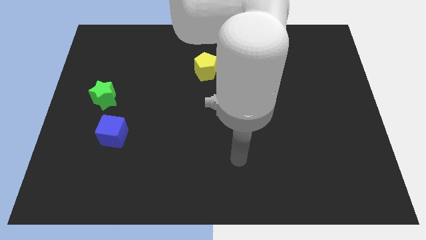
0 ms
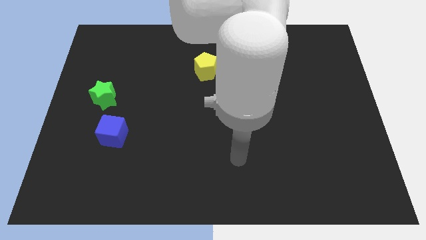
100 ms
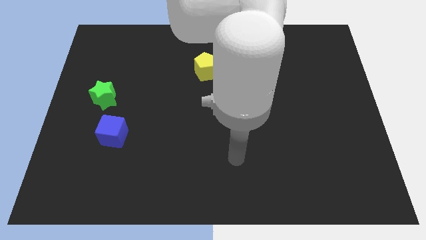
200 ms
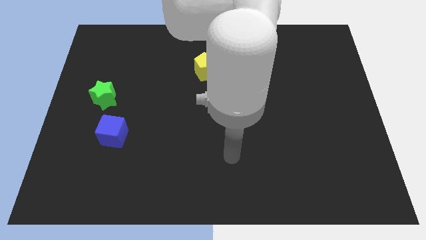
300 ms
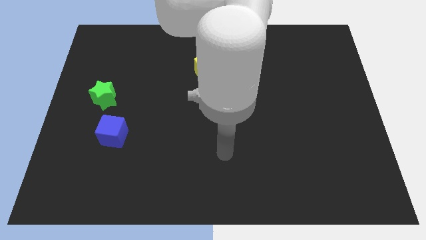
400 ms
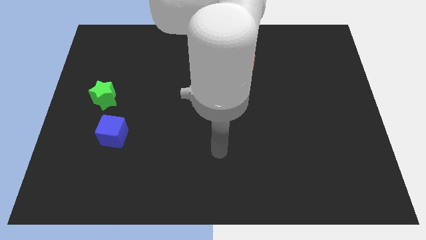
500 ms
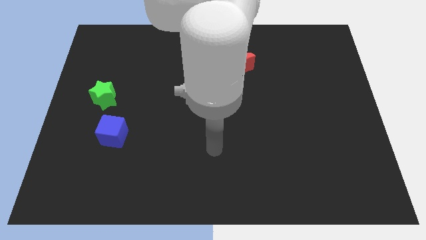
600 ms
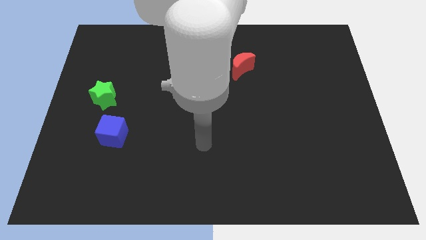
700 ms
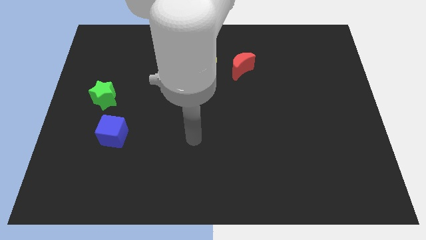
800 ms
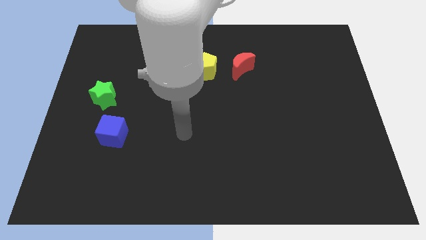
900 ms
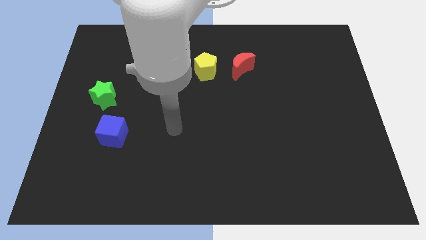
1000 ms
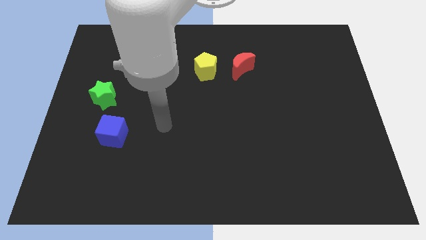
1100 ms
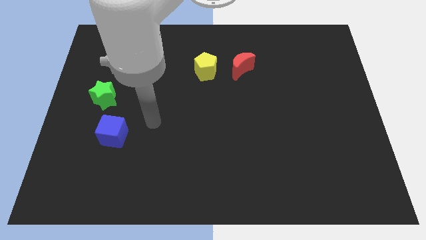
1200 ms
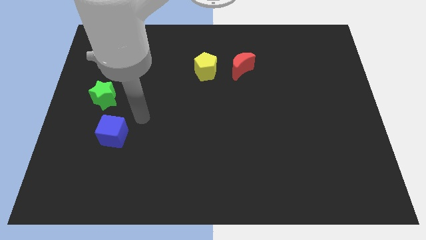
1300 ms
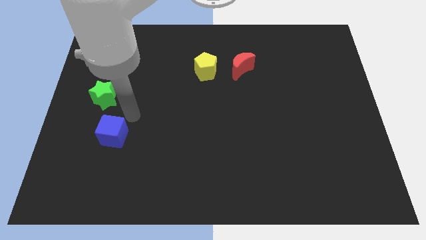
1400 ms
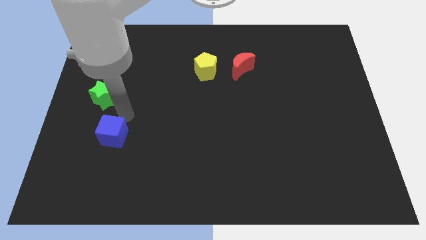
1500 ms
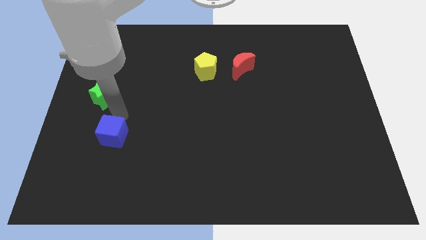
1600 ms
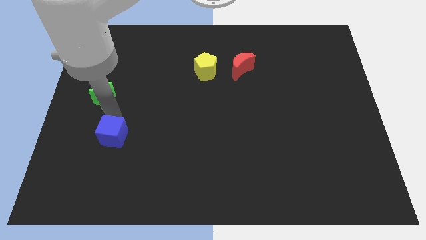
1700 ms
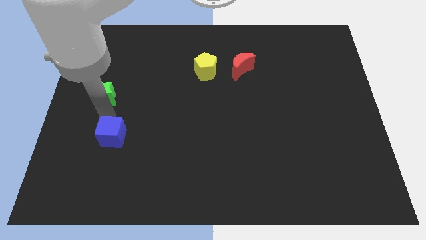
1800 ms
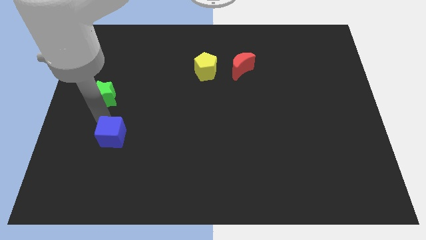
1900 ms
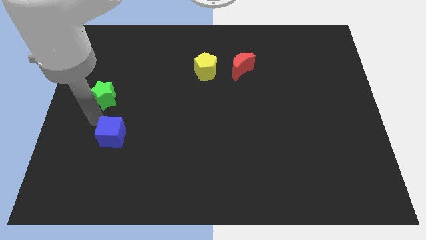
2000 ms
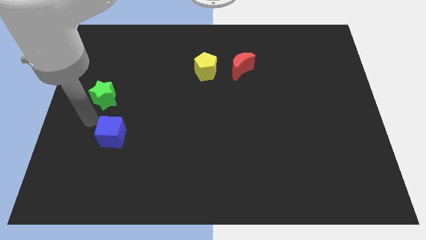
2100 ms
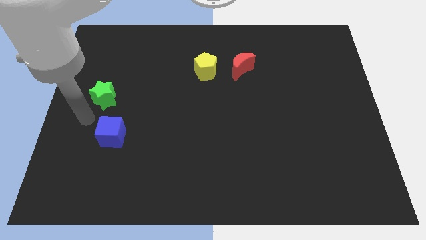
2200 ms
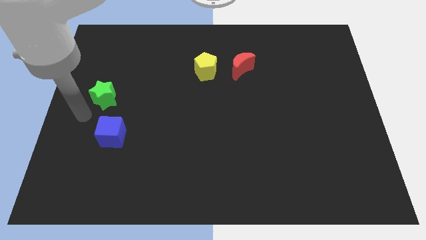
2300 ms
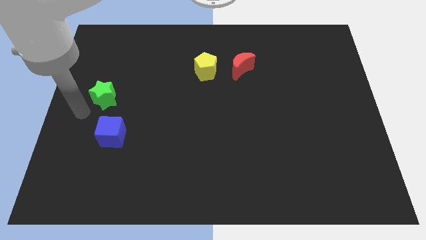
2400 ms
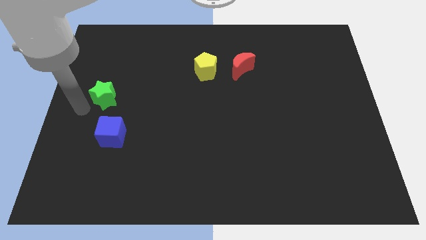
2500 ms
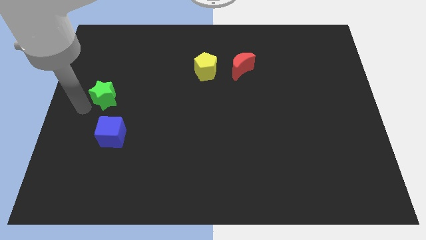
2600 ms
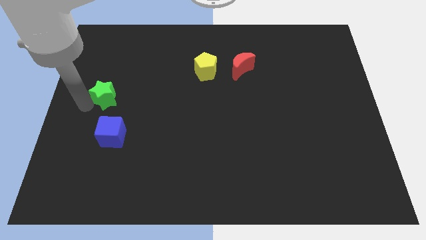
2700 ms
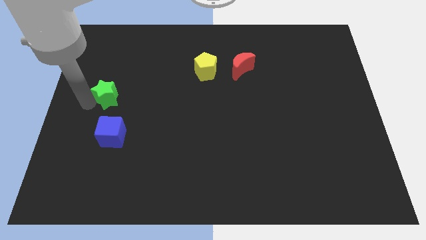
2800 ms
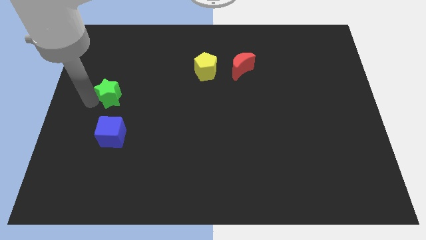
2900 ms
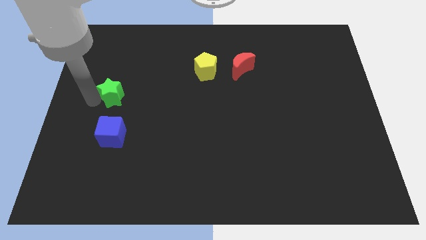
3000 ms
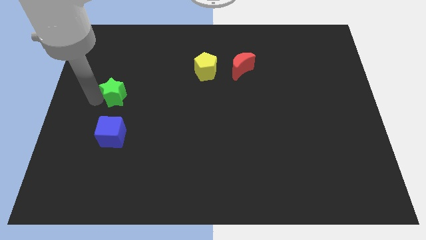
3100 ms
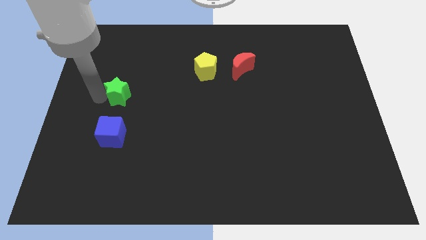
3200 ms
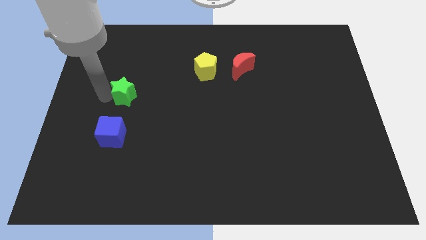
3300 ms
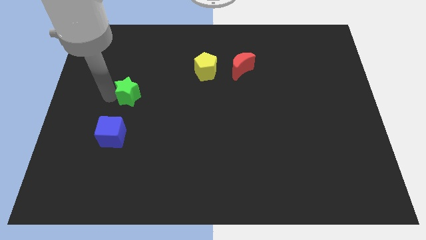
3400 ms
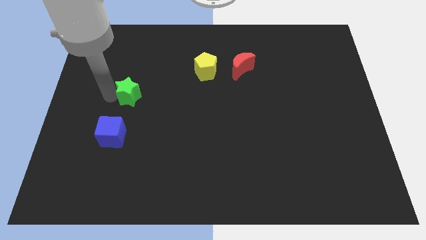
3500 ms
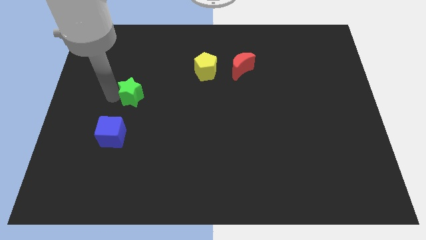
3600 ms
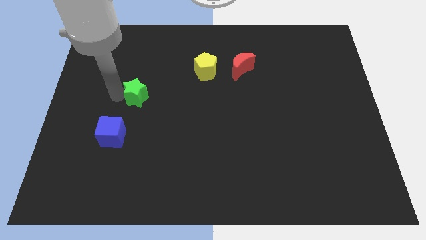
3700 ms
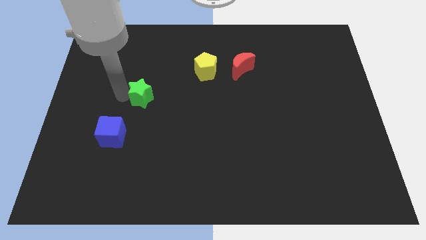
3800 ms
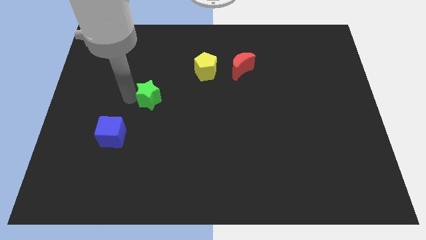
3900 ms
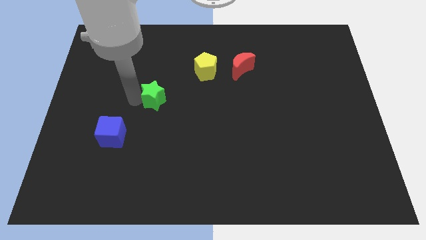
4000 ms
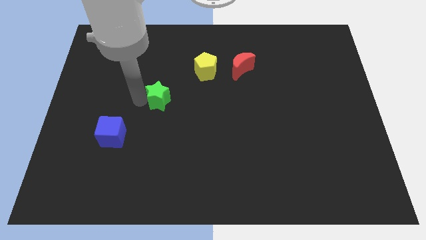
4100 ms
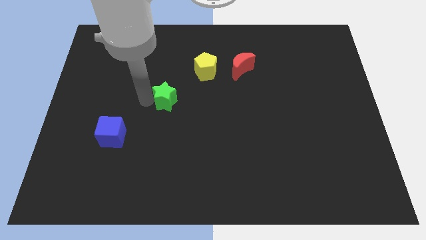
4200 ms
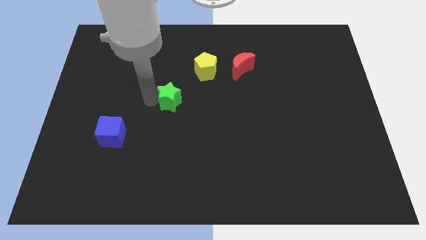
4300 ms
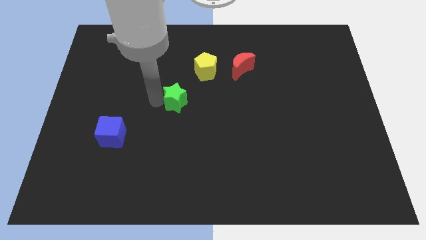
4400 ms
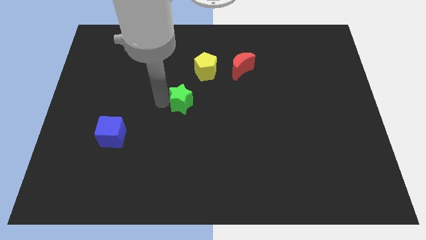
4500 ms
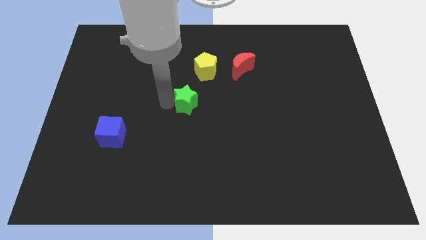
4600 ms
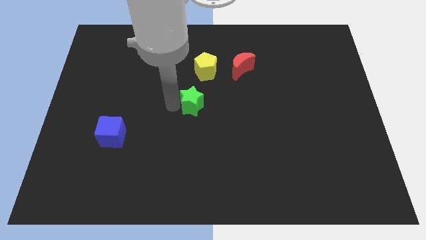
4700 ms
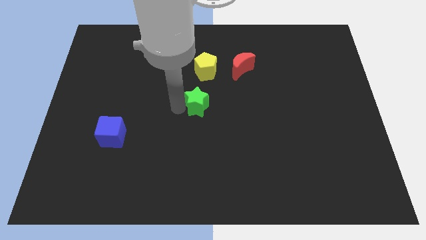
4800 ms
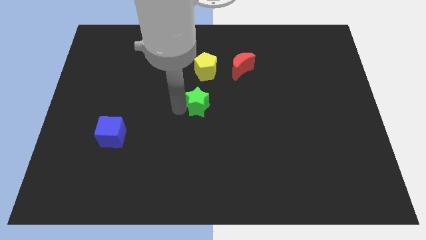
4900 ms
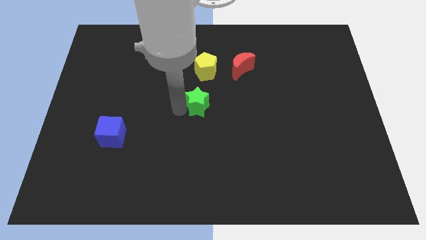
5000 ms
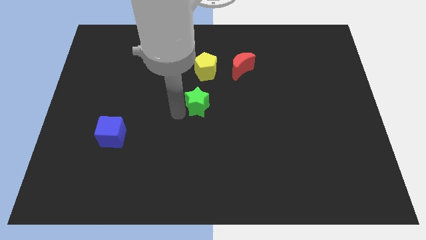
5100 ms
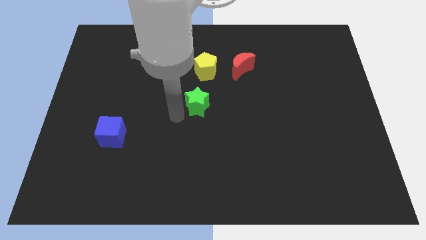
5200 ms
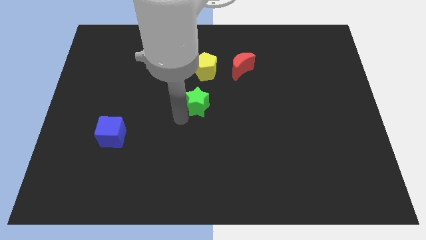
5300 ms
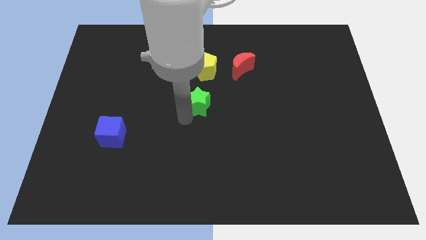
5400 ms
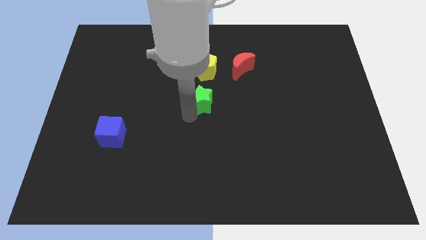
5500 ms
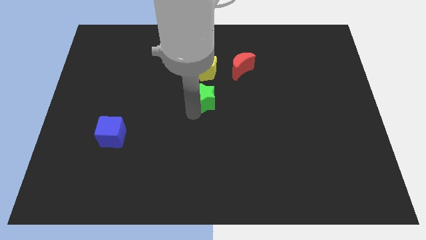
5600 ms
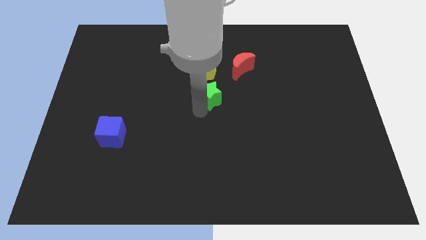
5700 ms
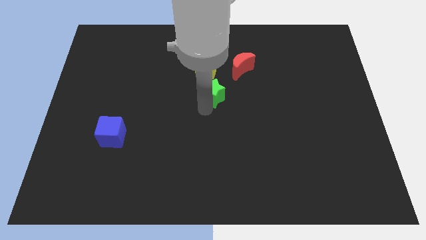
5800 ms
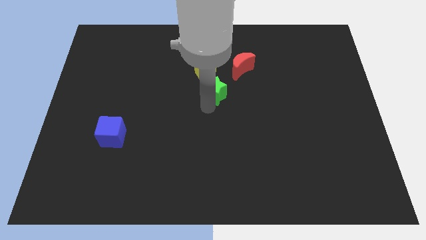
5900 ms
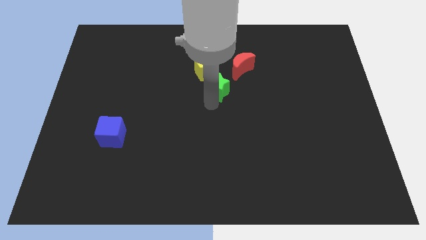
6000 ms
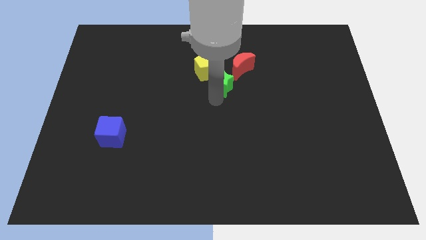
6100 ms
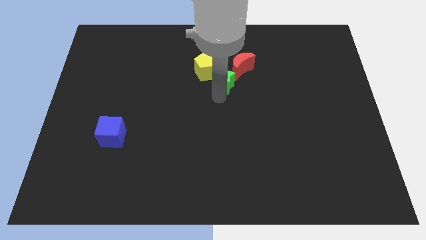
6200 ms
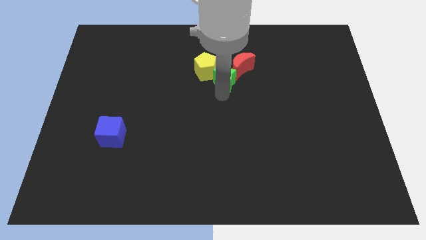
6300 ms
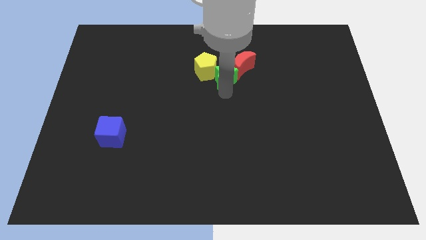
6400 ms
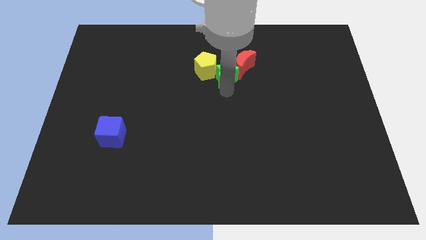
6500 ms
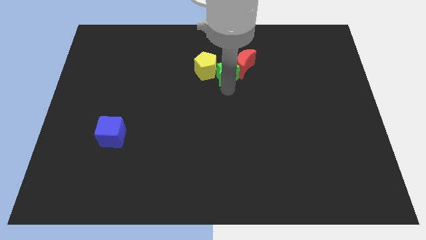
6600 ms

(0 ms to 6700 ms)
push the green star next to the red block

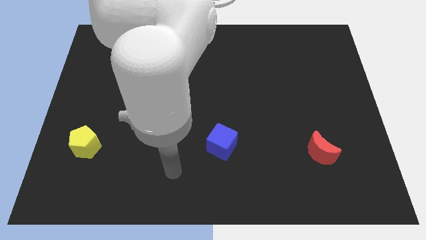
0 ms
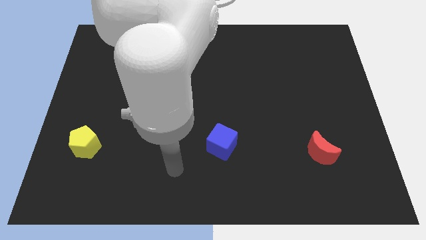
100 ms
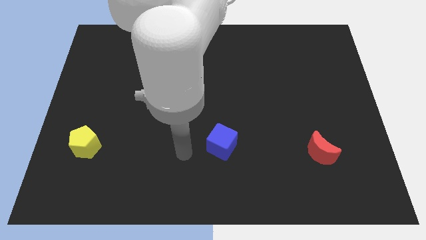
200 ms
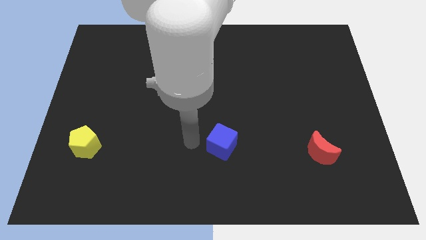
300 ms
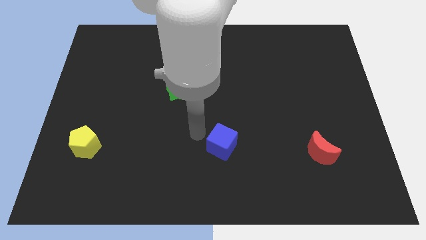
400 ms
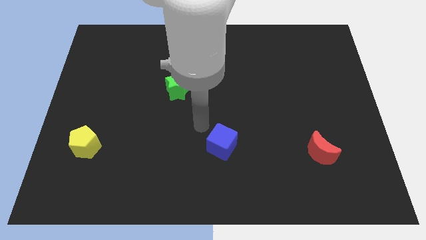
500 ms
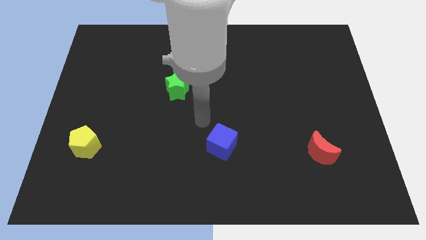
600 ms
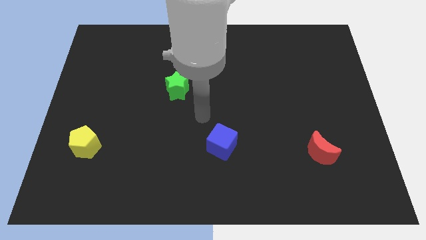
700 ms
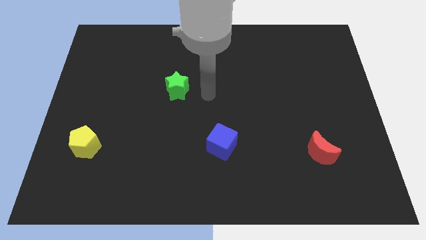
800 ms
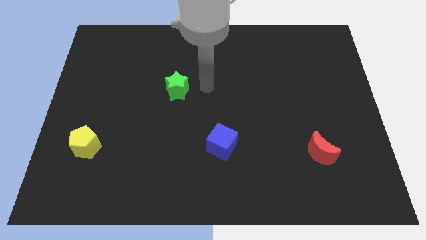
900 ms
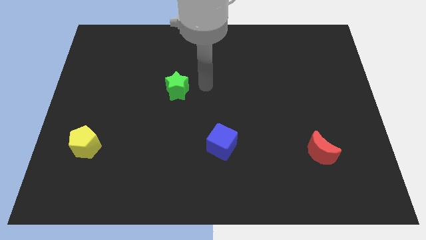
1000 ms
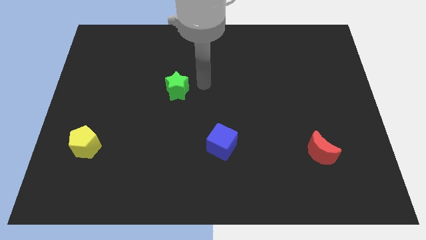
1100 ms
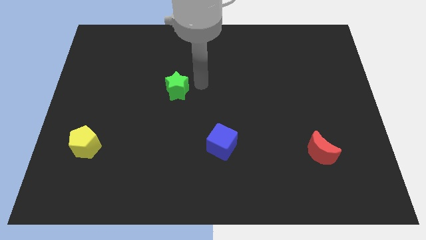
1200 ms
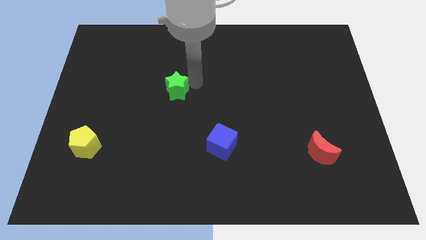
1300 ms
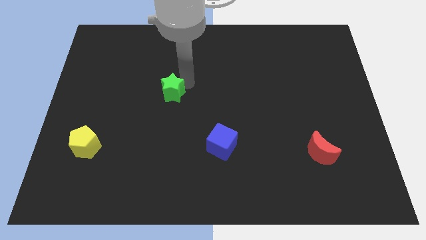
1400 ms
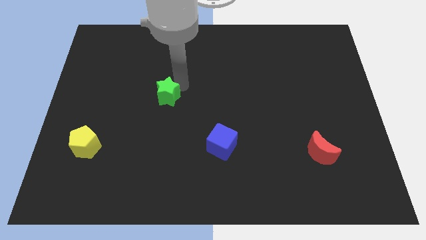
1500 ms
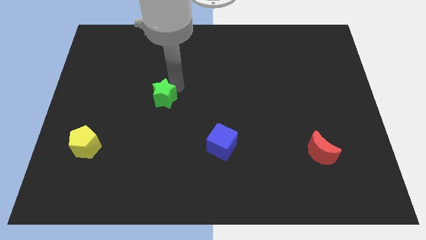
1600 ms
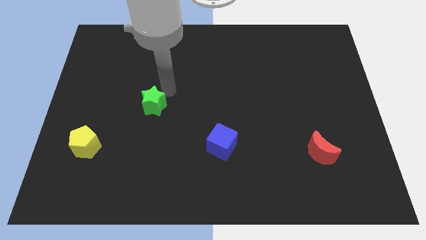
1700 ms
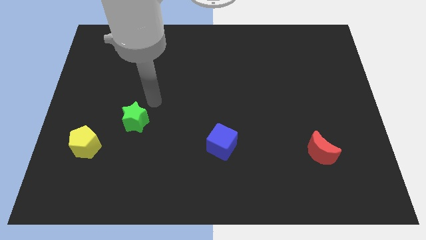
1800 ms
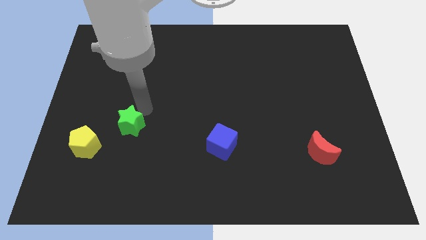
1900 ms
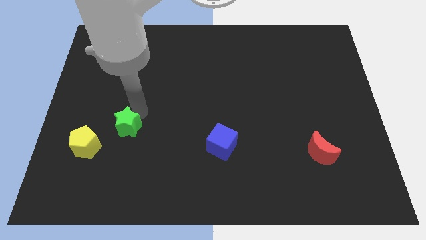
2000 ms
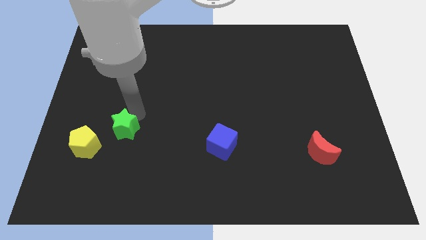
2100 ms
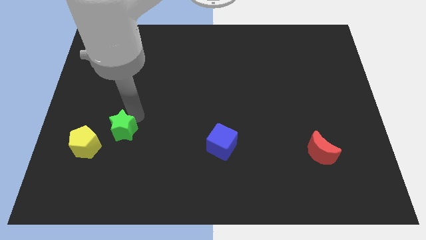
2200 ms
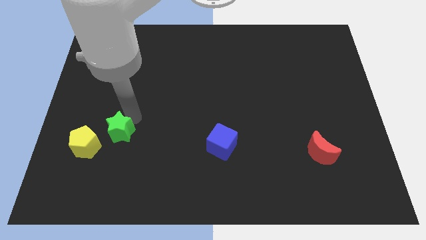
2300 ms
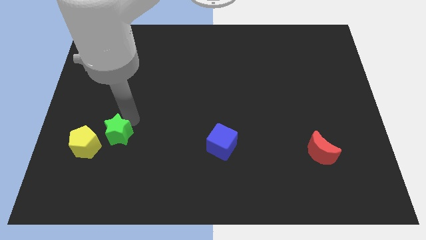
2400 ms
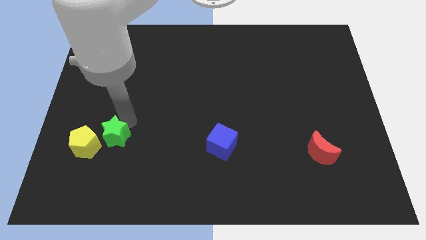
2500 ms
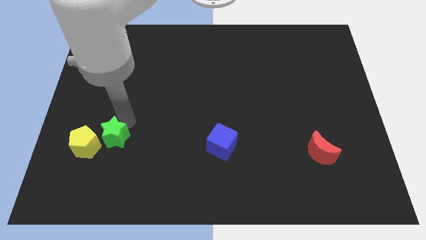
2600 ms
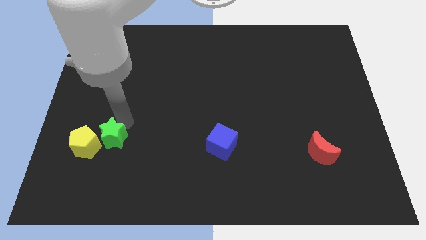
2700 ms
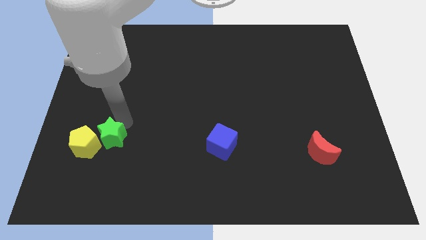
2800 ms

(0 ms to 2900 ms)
move the star towards the yellow block
